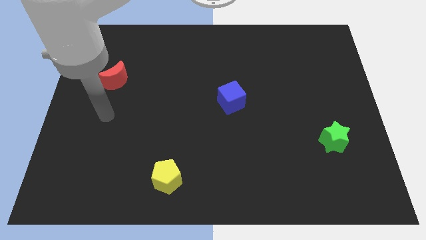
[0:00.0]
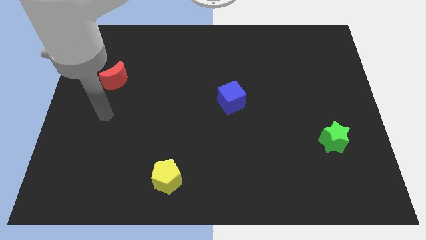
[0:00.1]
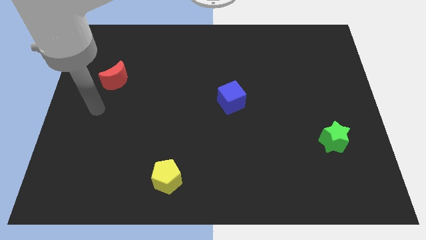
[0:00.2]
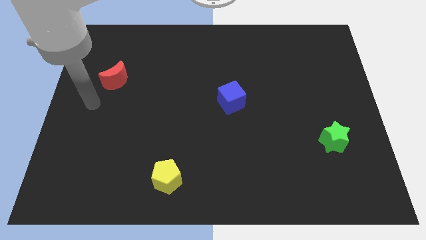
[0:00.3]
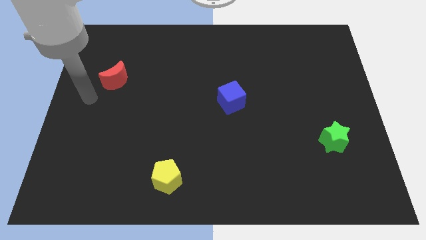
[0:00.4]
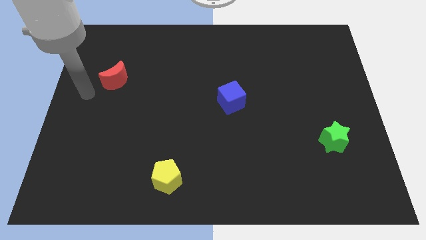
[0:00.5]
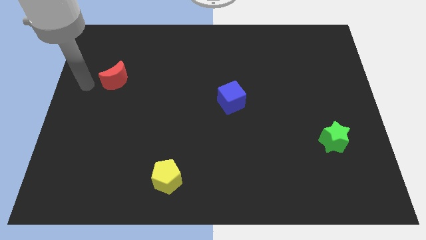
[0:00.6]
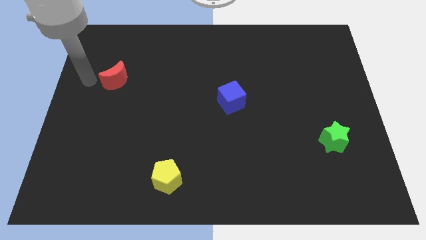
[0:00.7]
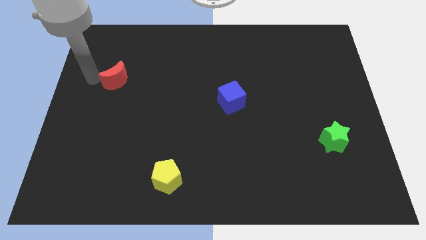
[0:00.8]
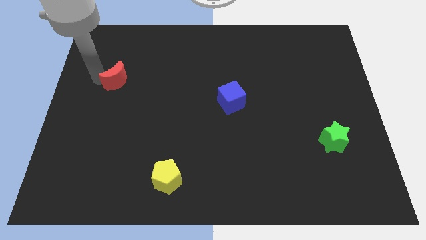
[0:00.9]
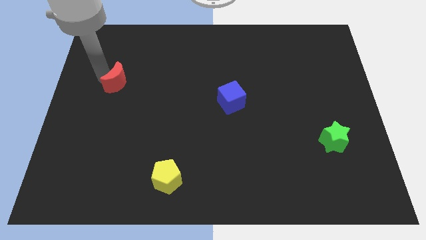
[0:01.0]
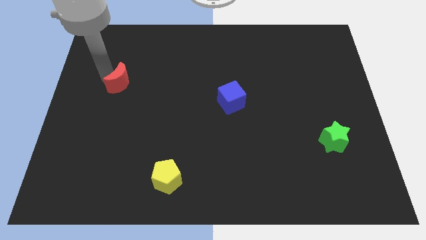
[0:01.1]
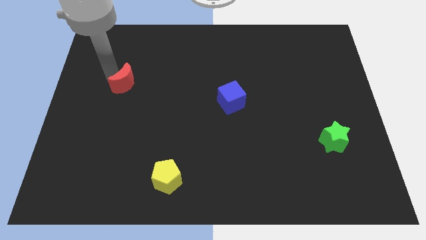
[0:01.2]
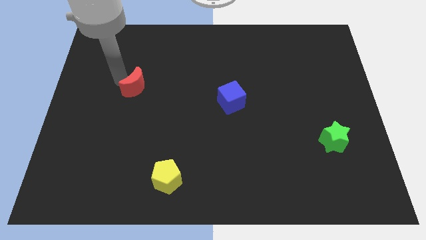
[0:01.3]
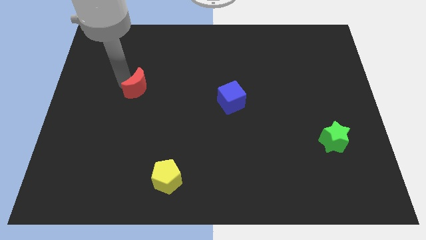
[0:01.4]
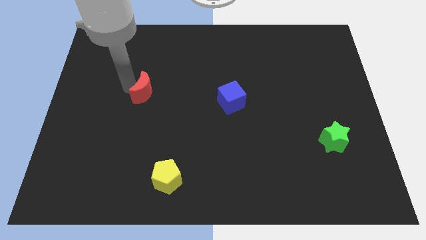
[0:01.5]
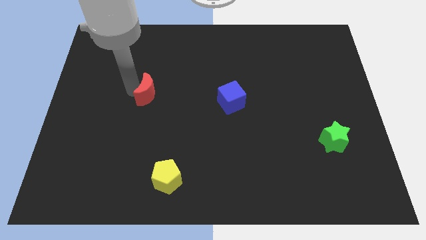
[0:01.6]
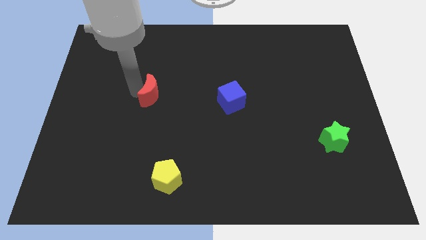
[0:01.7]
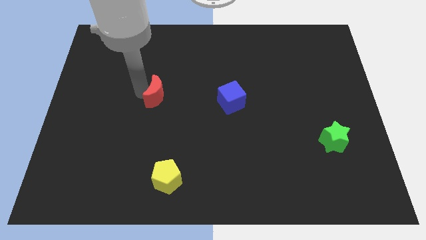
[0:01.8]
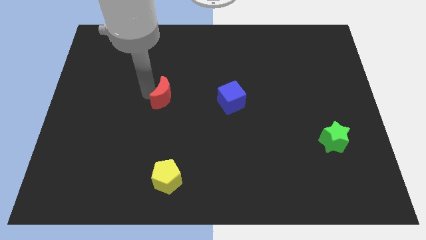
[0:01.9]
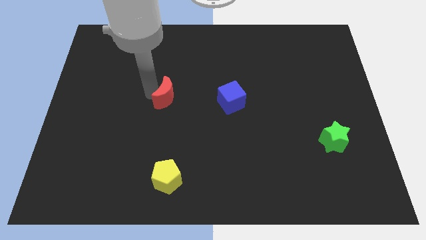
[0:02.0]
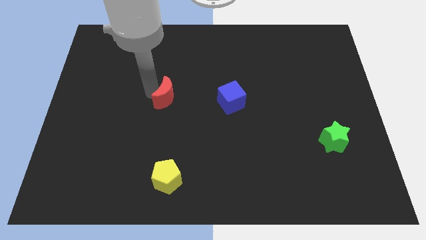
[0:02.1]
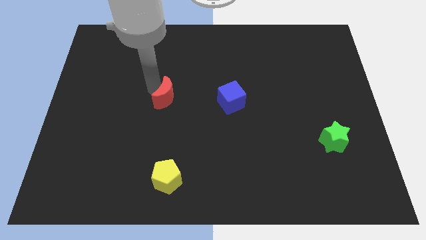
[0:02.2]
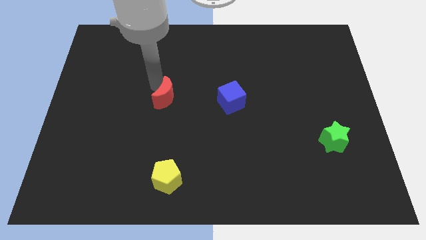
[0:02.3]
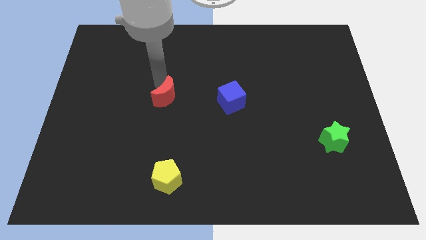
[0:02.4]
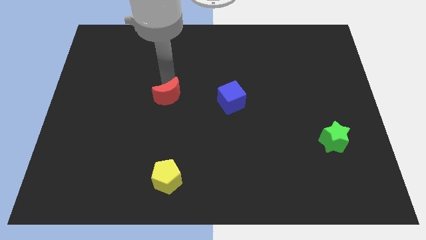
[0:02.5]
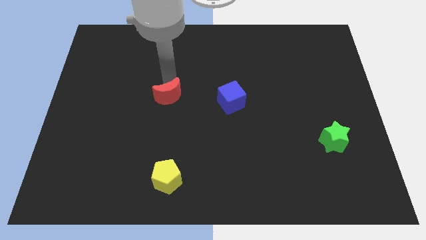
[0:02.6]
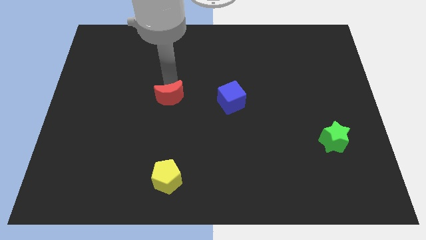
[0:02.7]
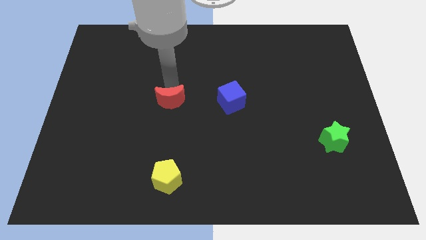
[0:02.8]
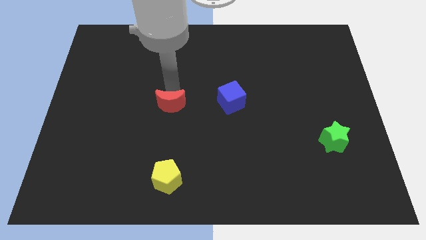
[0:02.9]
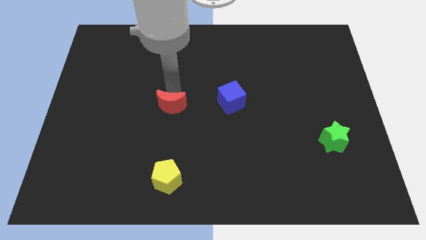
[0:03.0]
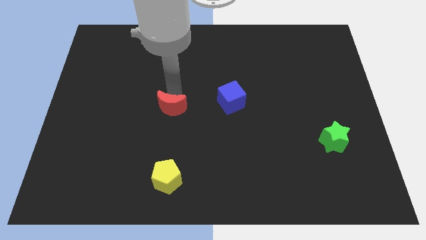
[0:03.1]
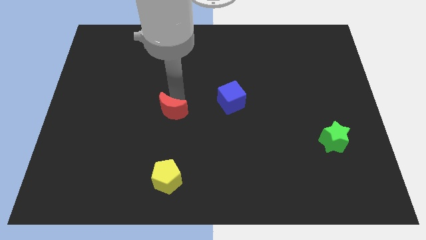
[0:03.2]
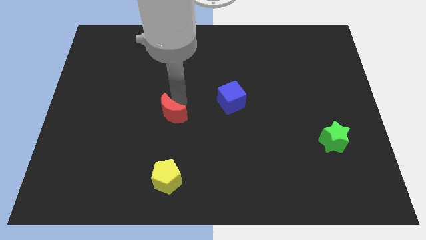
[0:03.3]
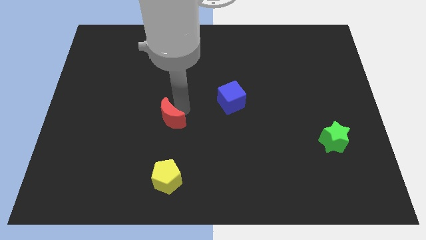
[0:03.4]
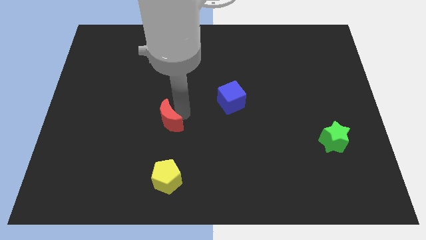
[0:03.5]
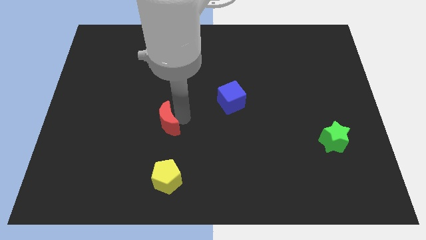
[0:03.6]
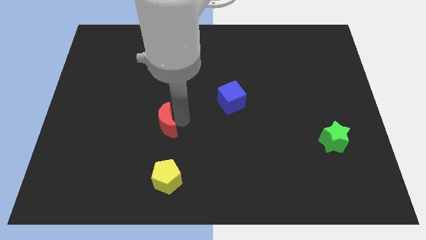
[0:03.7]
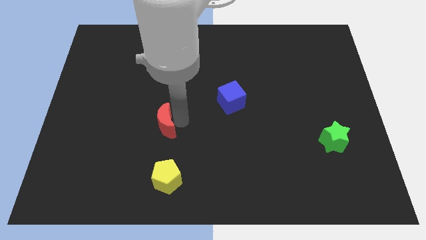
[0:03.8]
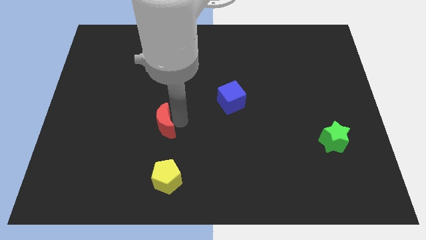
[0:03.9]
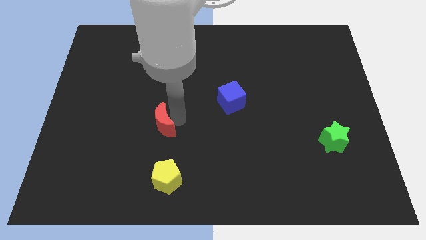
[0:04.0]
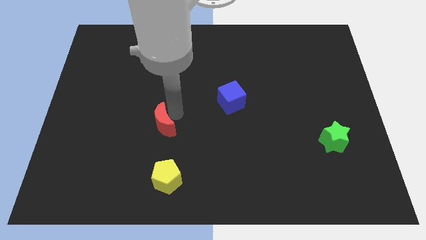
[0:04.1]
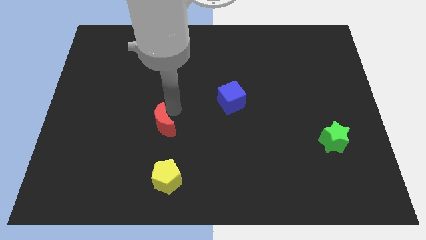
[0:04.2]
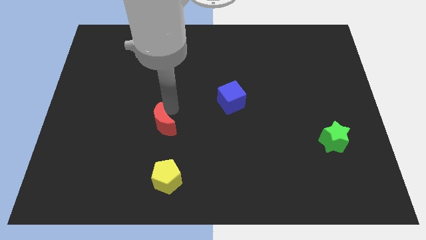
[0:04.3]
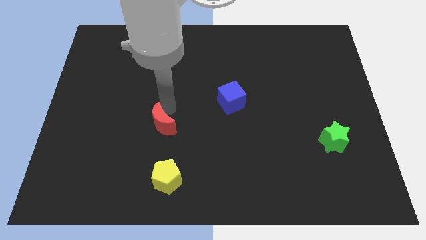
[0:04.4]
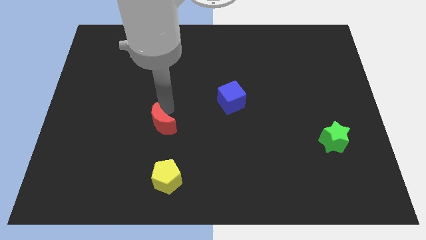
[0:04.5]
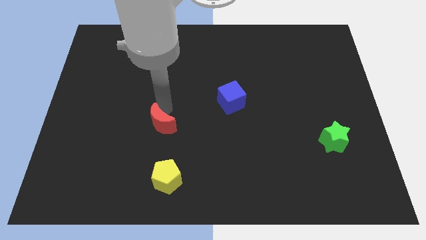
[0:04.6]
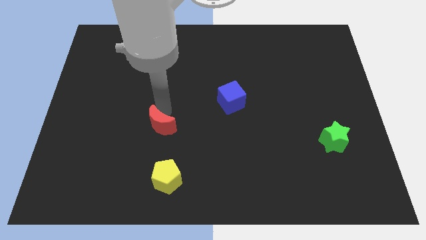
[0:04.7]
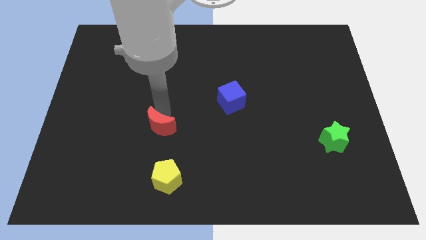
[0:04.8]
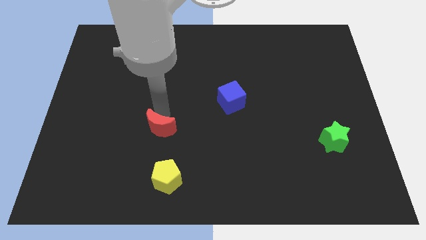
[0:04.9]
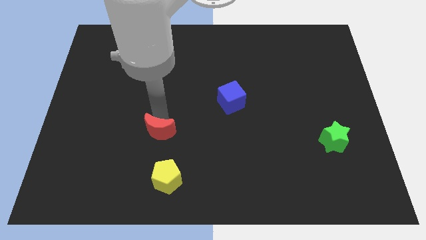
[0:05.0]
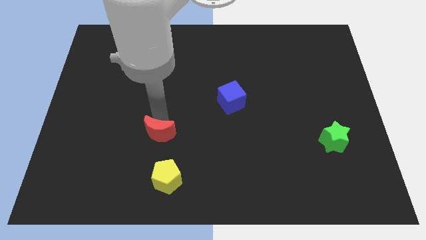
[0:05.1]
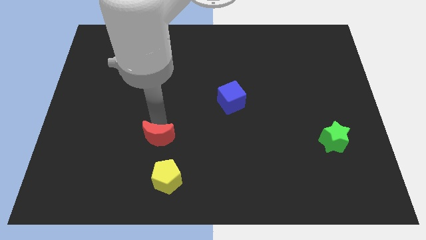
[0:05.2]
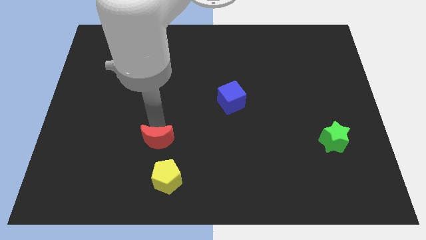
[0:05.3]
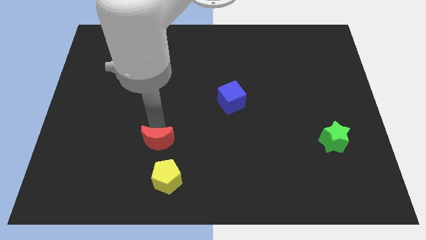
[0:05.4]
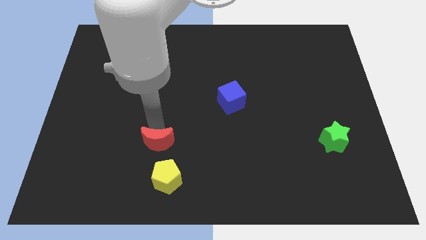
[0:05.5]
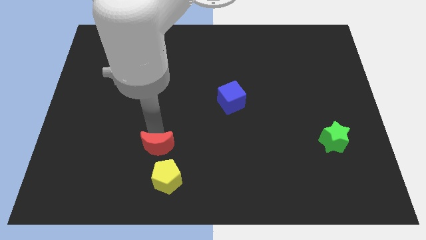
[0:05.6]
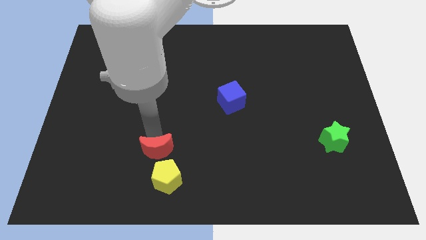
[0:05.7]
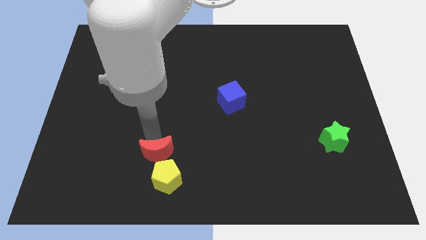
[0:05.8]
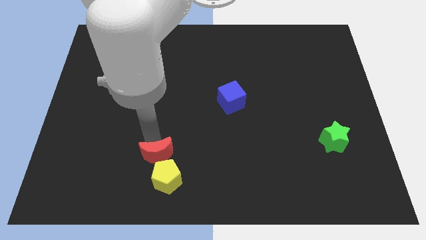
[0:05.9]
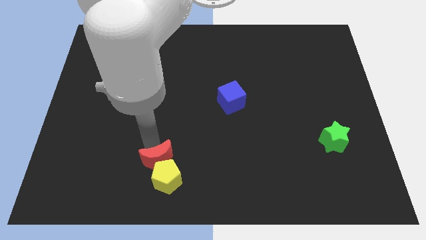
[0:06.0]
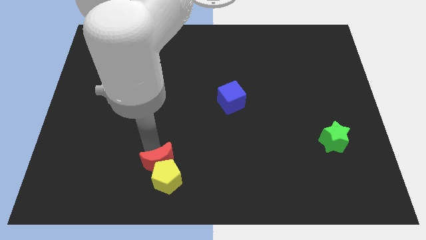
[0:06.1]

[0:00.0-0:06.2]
push the red moon next to the yellow block

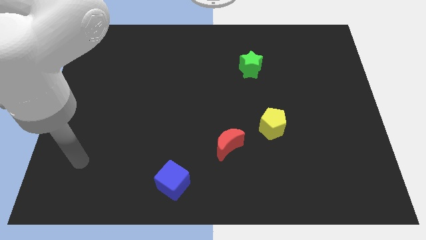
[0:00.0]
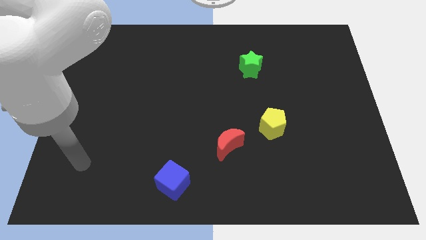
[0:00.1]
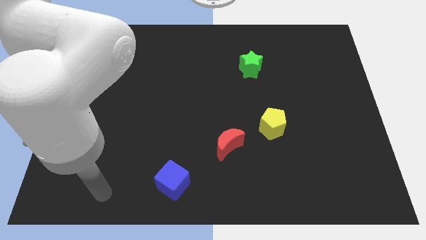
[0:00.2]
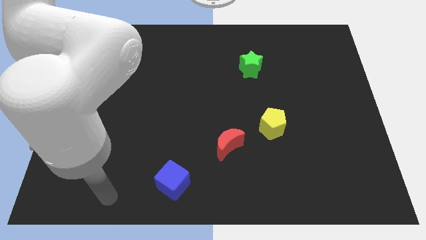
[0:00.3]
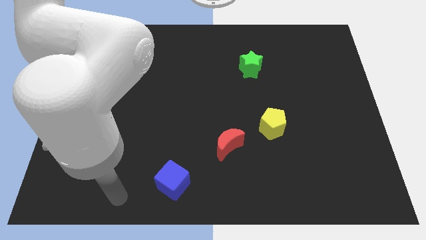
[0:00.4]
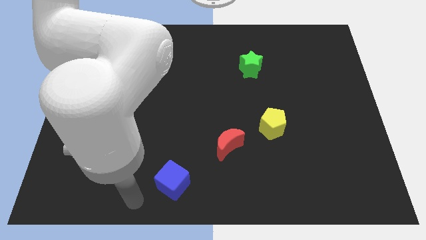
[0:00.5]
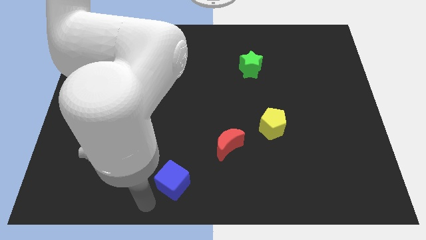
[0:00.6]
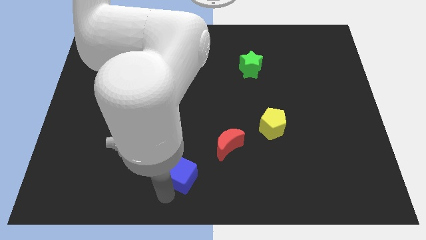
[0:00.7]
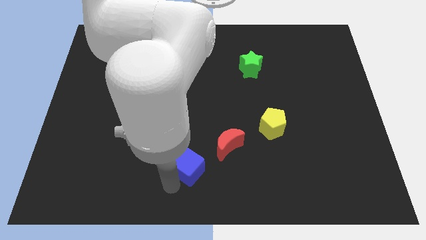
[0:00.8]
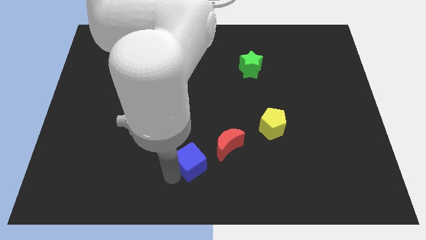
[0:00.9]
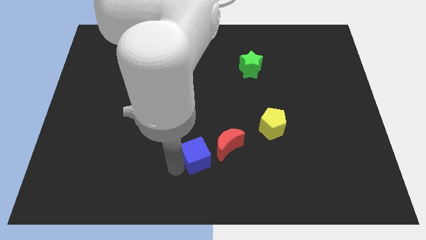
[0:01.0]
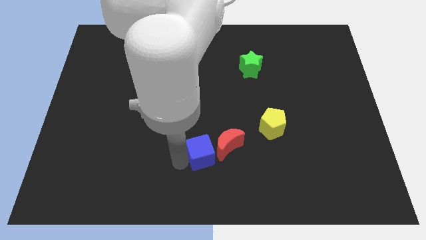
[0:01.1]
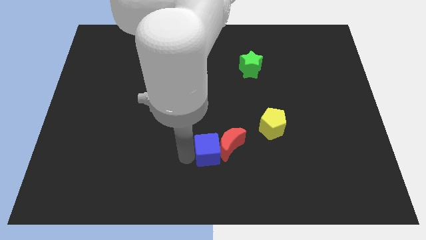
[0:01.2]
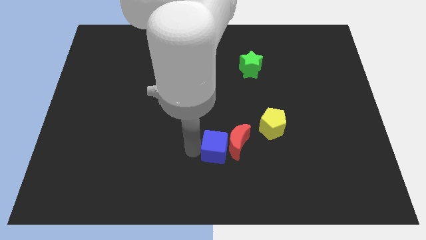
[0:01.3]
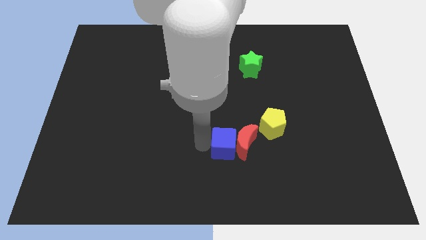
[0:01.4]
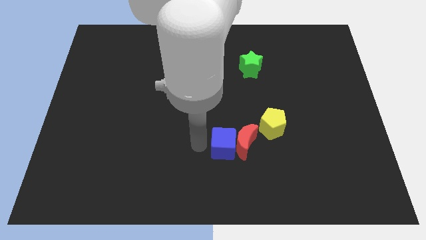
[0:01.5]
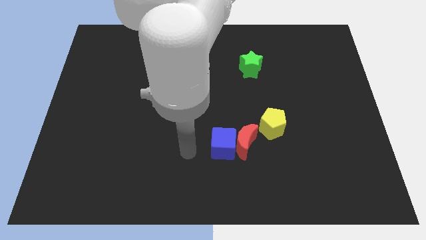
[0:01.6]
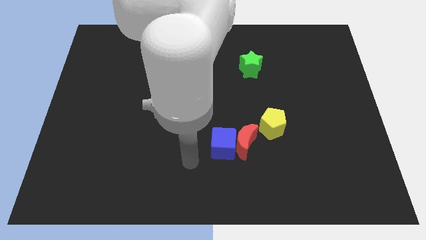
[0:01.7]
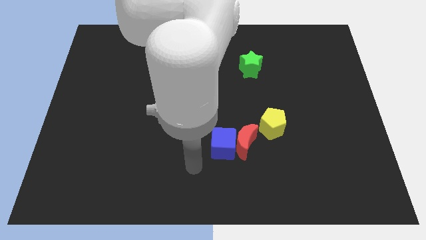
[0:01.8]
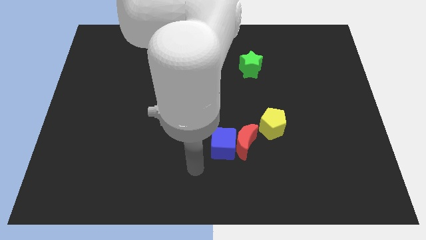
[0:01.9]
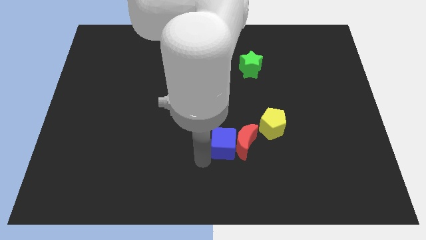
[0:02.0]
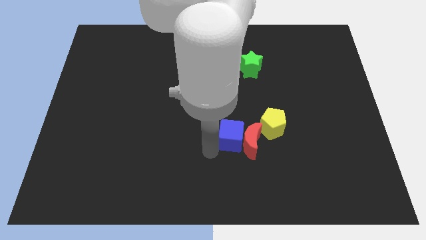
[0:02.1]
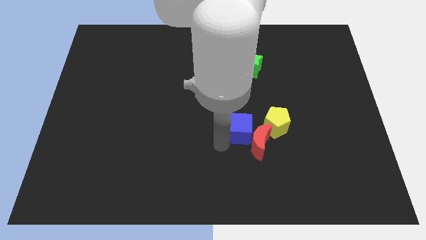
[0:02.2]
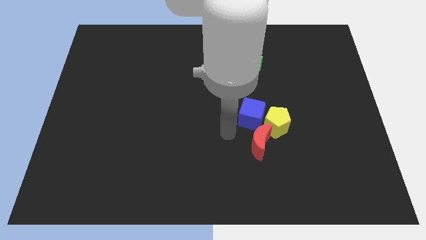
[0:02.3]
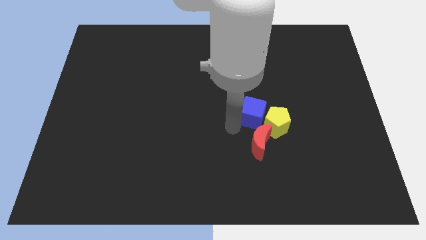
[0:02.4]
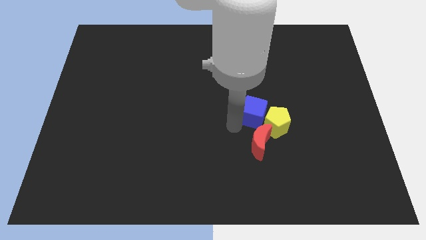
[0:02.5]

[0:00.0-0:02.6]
put the cube next to the pentagon

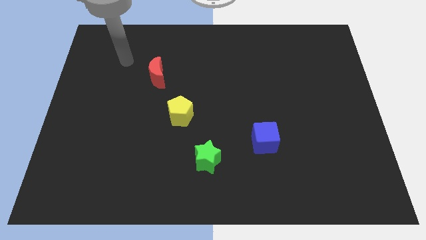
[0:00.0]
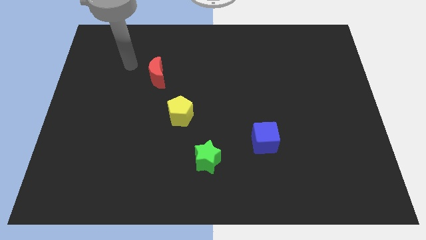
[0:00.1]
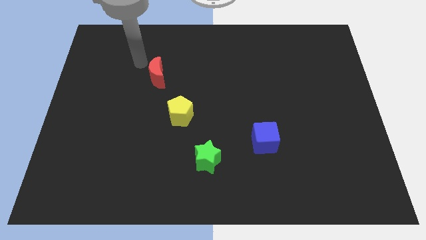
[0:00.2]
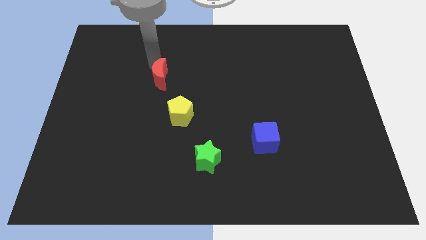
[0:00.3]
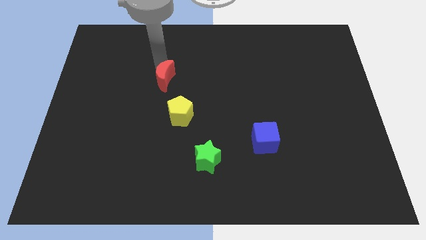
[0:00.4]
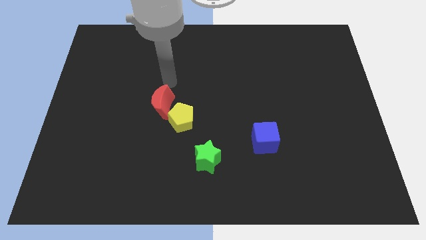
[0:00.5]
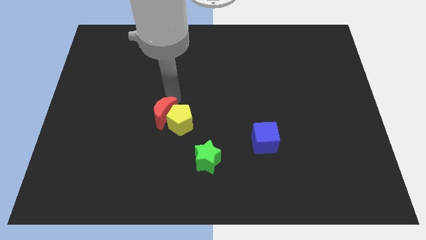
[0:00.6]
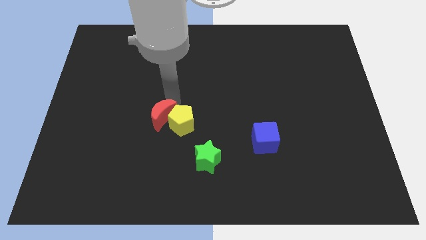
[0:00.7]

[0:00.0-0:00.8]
slide the red moon to the yellow block
